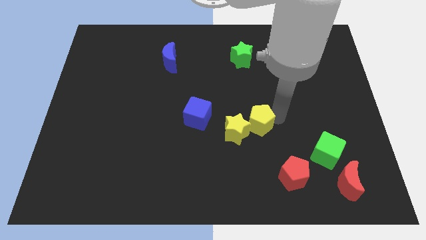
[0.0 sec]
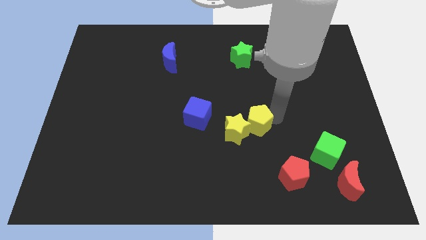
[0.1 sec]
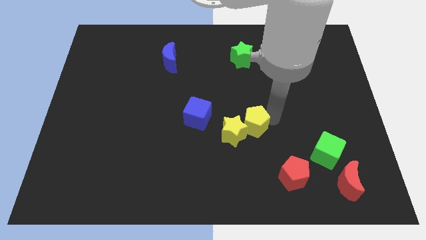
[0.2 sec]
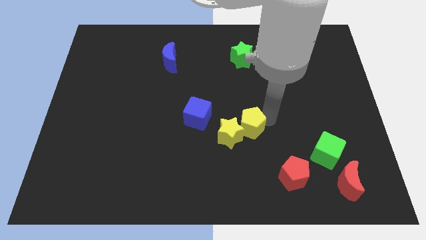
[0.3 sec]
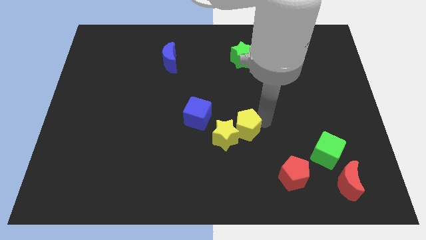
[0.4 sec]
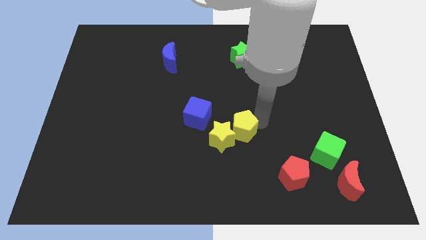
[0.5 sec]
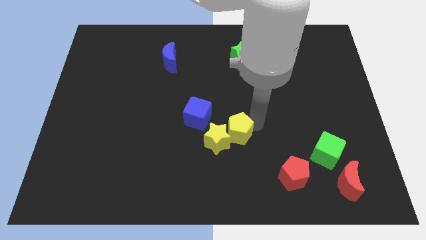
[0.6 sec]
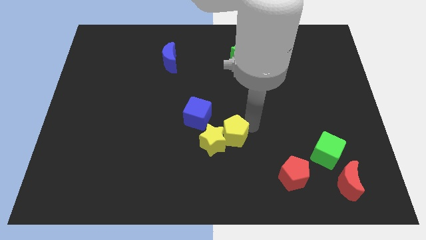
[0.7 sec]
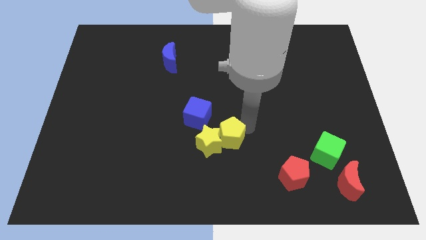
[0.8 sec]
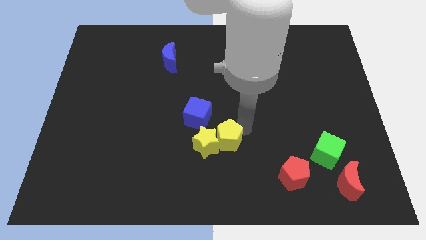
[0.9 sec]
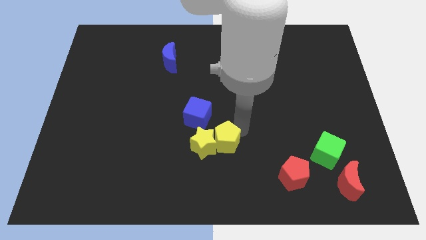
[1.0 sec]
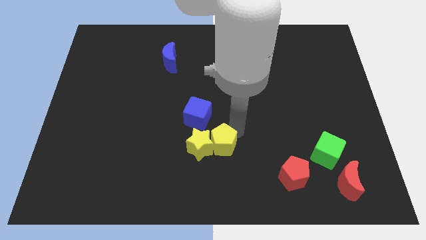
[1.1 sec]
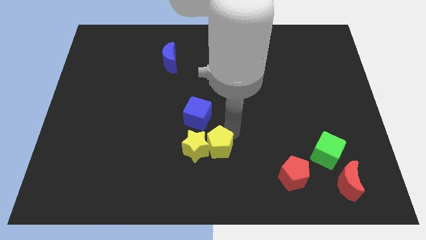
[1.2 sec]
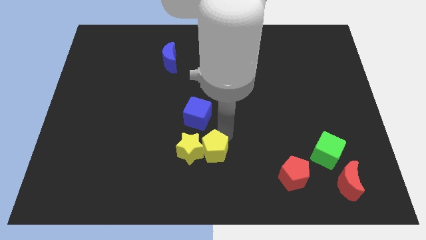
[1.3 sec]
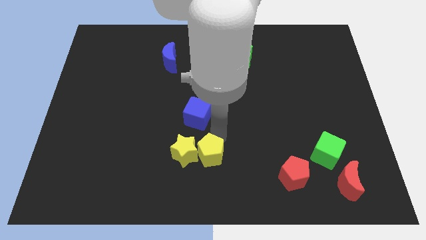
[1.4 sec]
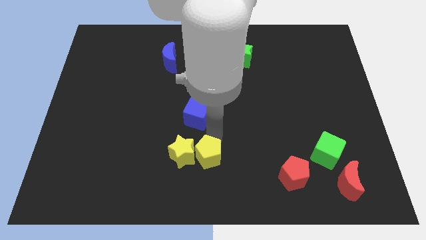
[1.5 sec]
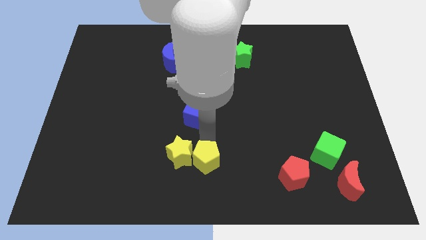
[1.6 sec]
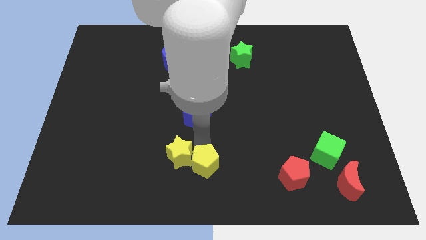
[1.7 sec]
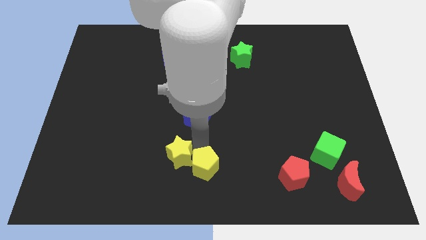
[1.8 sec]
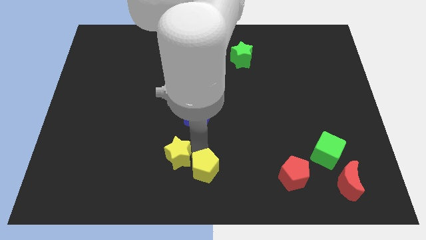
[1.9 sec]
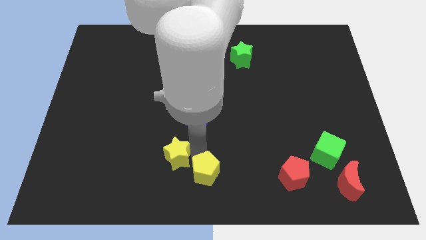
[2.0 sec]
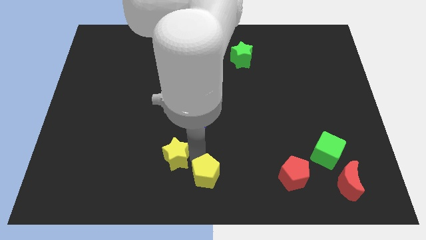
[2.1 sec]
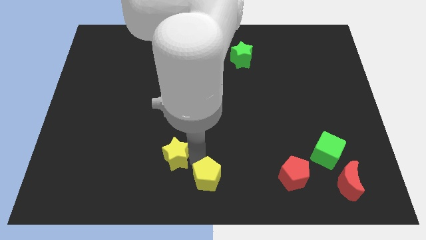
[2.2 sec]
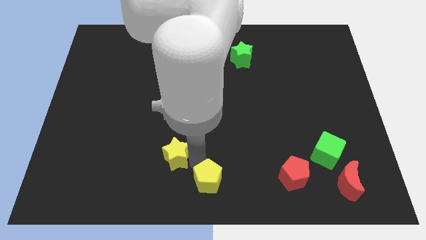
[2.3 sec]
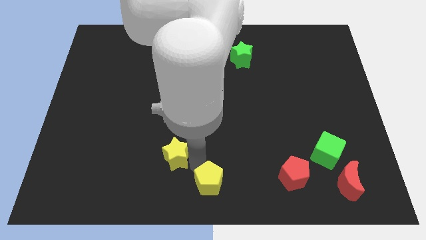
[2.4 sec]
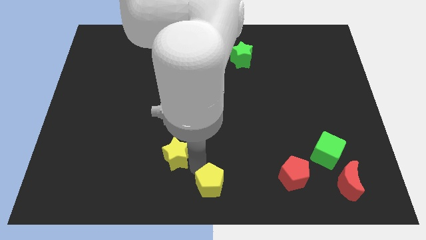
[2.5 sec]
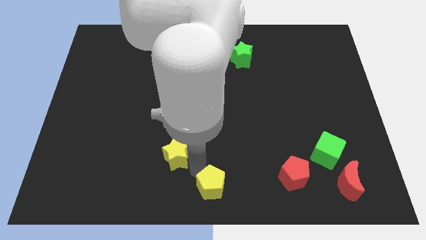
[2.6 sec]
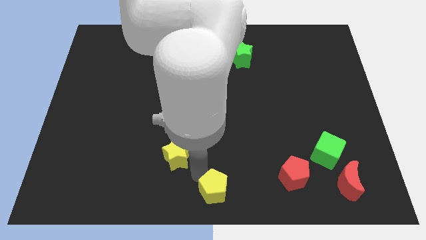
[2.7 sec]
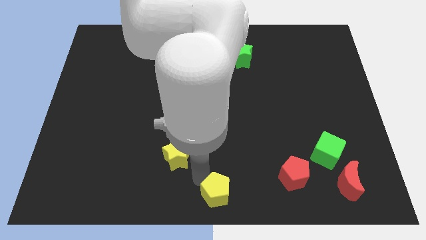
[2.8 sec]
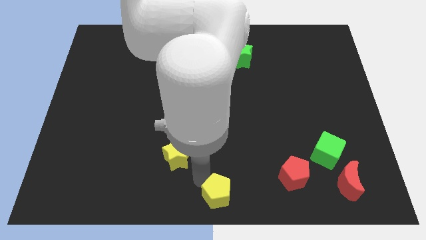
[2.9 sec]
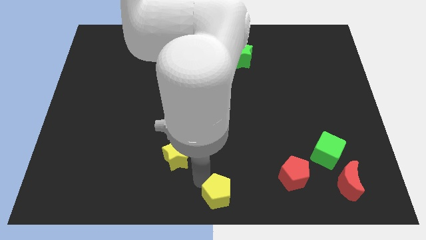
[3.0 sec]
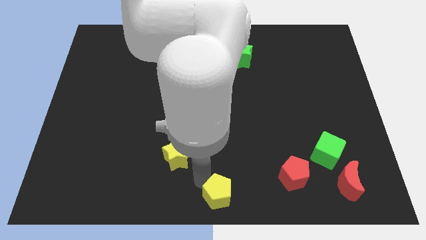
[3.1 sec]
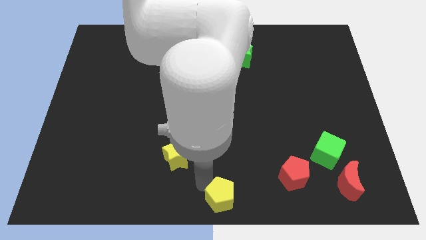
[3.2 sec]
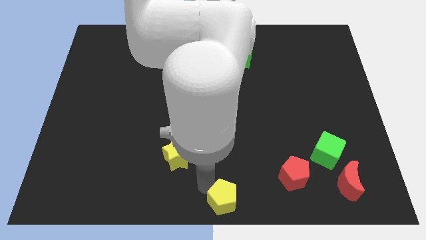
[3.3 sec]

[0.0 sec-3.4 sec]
push the yellow pentagon to the bottom center of the board

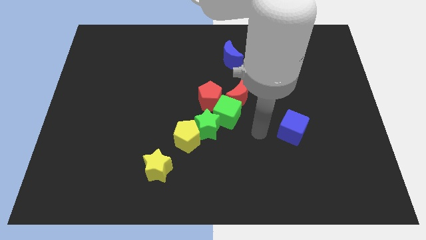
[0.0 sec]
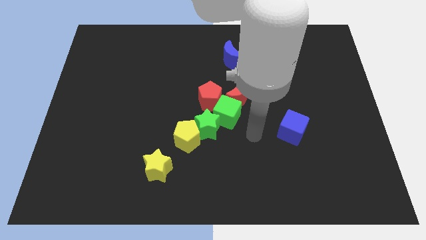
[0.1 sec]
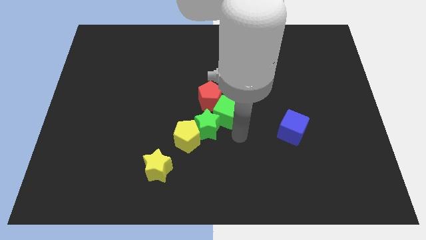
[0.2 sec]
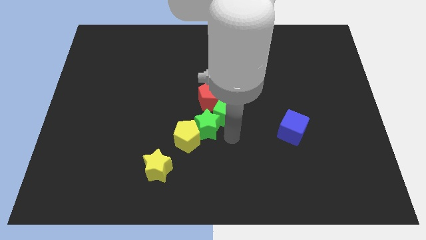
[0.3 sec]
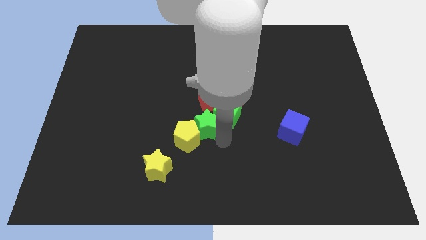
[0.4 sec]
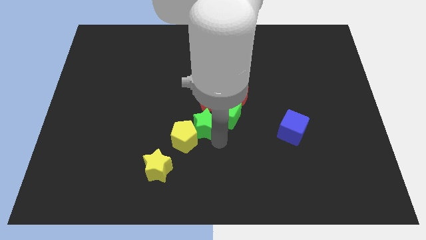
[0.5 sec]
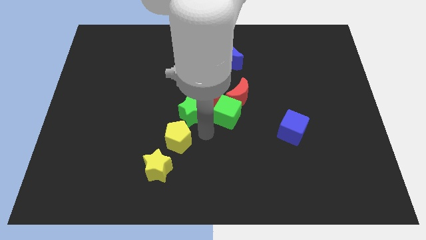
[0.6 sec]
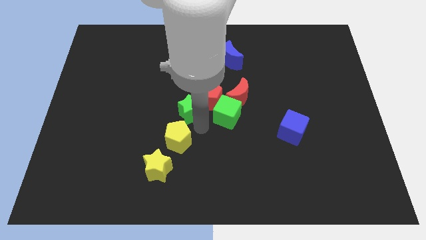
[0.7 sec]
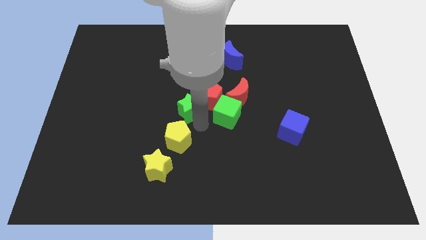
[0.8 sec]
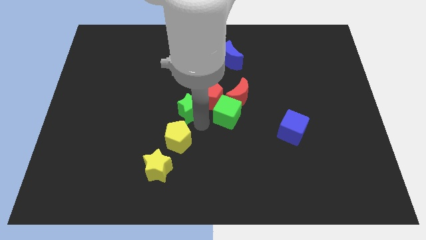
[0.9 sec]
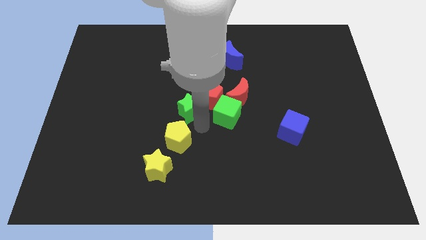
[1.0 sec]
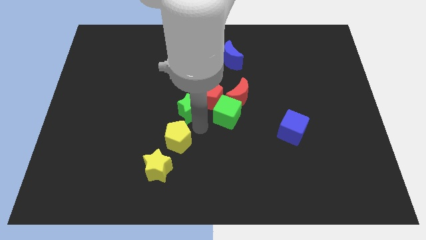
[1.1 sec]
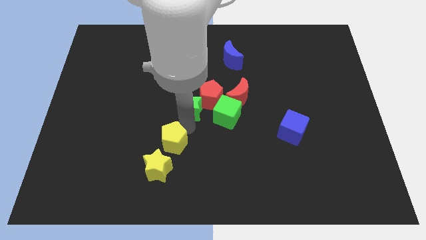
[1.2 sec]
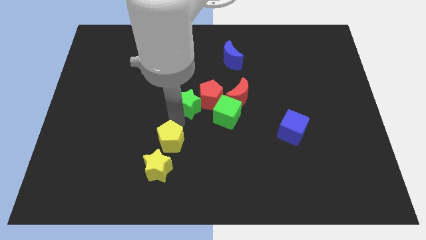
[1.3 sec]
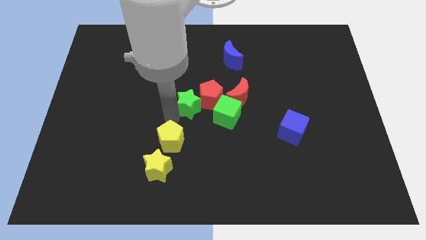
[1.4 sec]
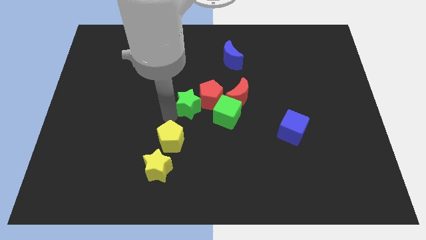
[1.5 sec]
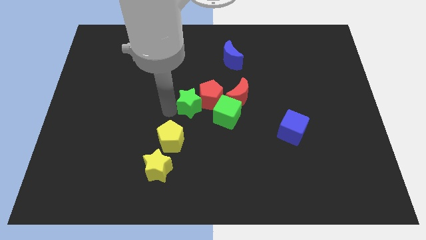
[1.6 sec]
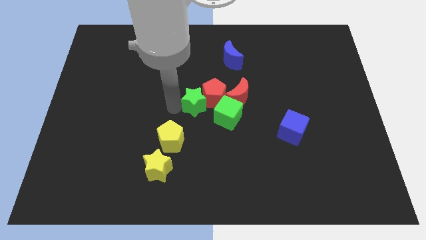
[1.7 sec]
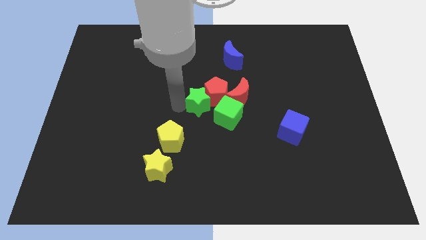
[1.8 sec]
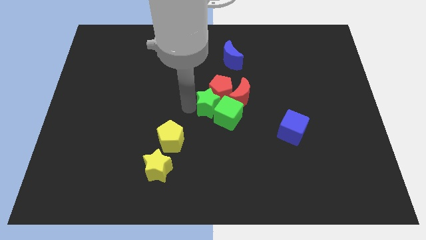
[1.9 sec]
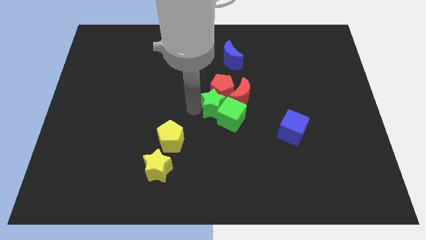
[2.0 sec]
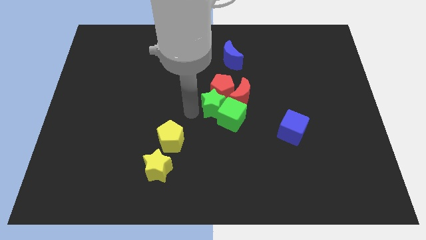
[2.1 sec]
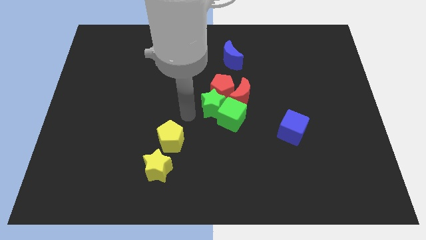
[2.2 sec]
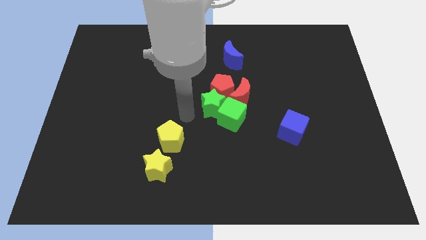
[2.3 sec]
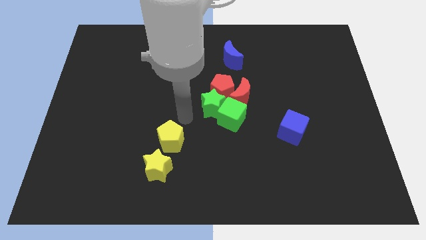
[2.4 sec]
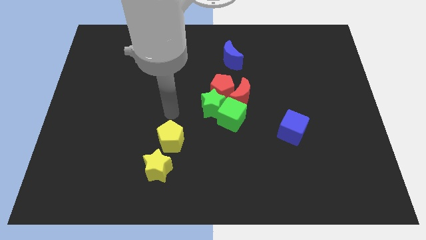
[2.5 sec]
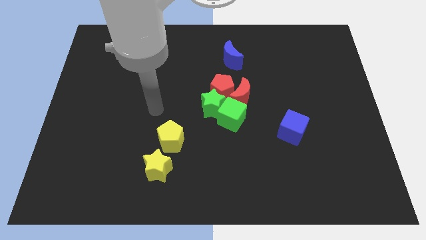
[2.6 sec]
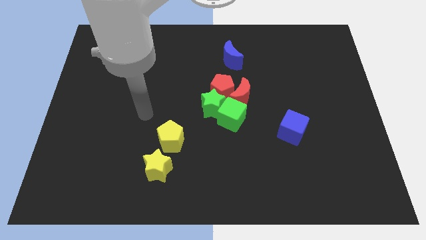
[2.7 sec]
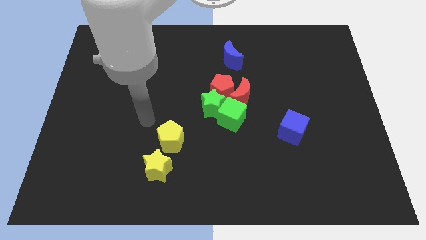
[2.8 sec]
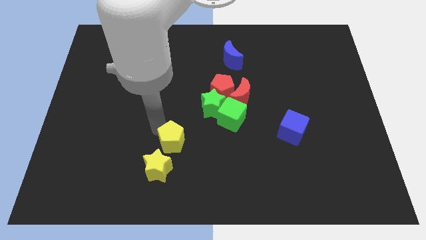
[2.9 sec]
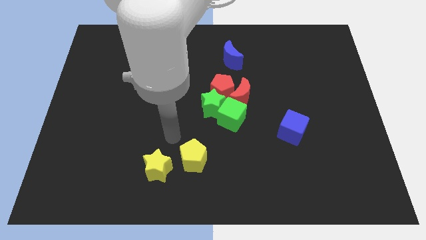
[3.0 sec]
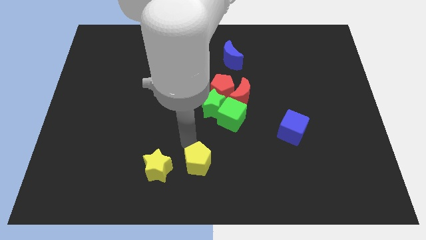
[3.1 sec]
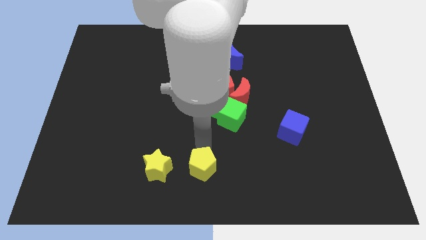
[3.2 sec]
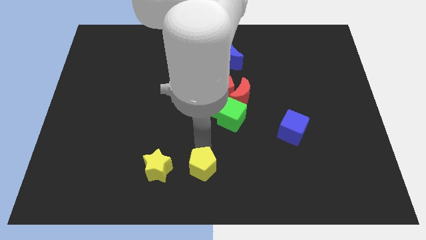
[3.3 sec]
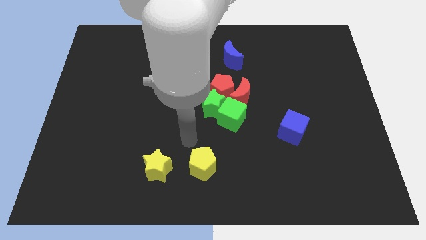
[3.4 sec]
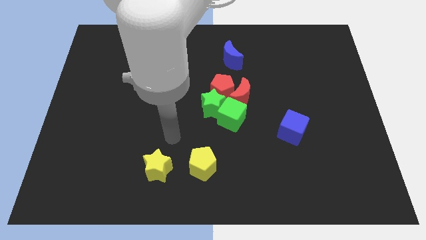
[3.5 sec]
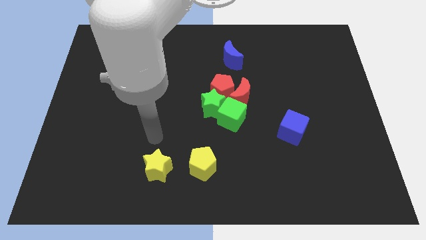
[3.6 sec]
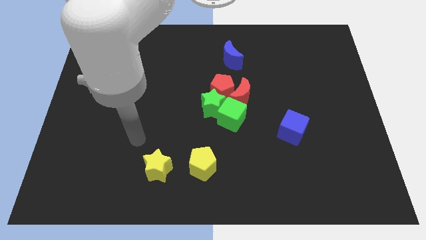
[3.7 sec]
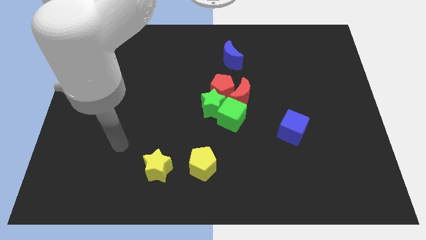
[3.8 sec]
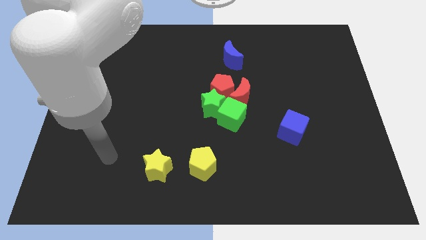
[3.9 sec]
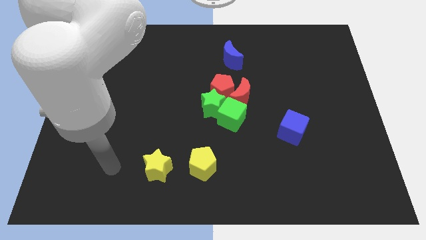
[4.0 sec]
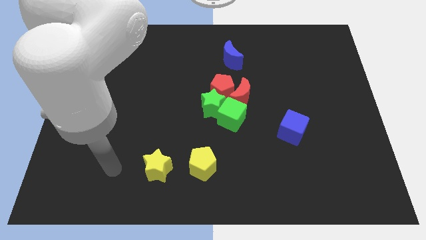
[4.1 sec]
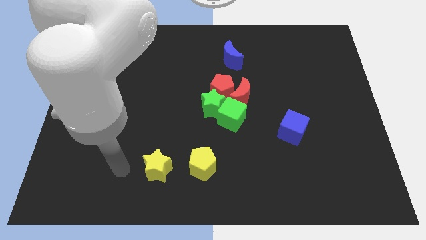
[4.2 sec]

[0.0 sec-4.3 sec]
separate yellow pentagon from the group of blocks

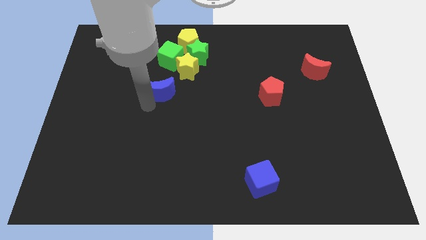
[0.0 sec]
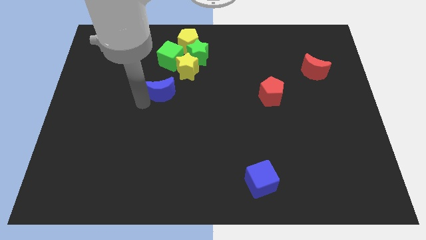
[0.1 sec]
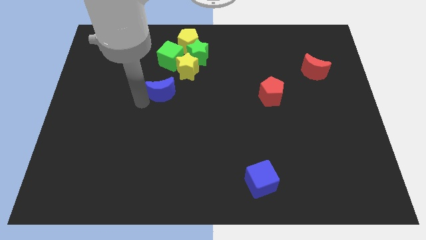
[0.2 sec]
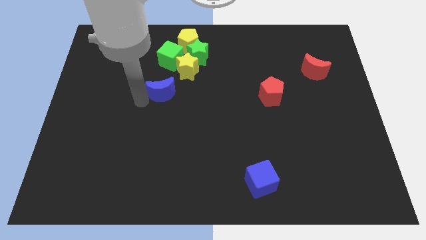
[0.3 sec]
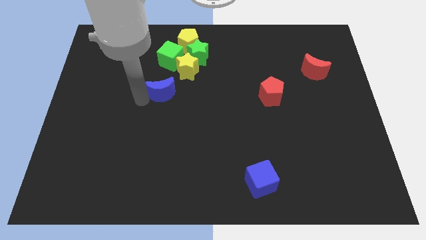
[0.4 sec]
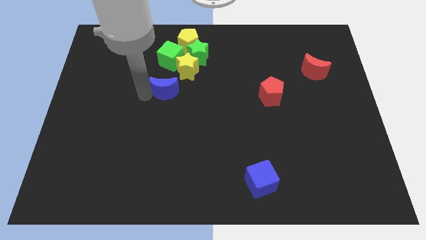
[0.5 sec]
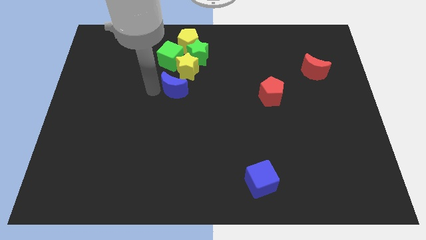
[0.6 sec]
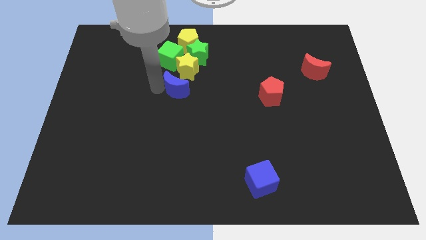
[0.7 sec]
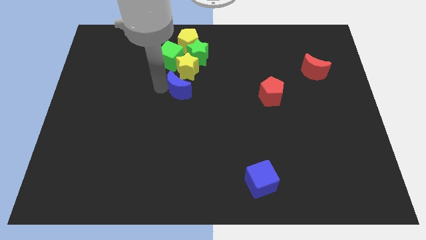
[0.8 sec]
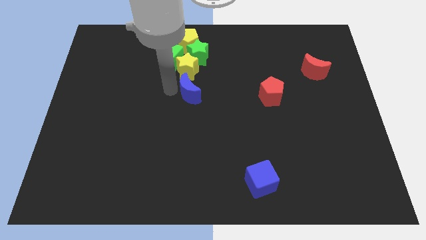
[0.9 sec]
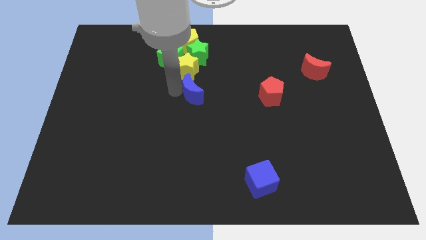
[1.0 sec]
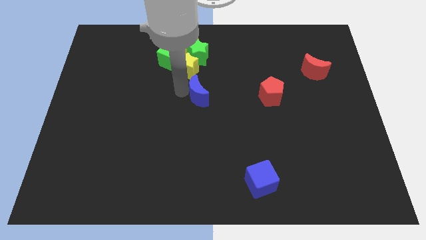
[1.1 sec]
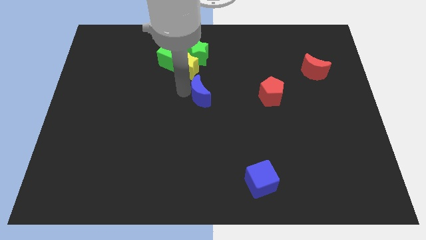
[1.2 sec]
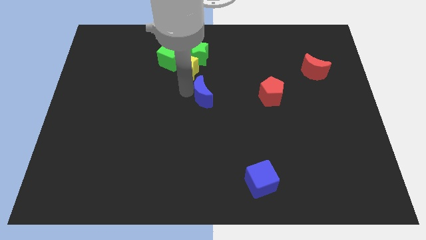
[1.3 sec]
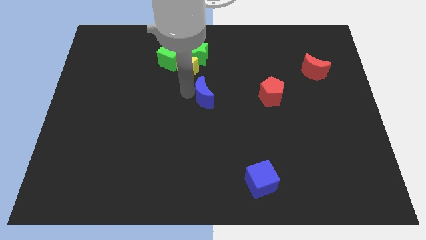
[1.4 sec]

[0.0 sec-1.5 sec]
move blue moon towards center
